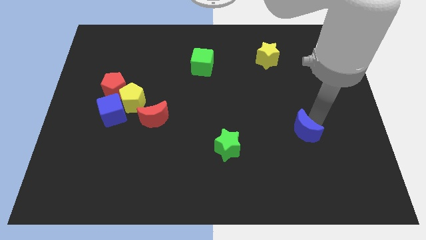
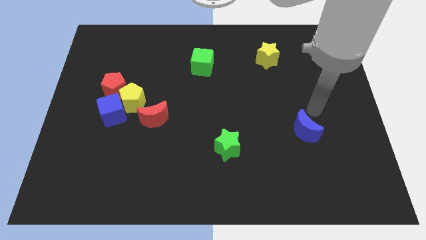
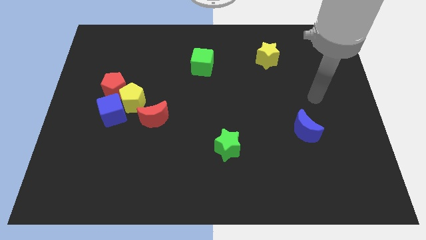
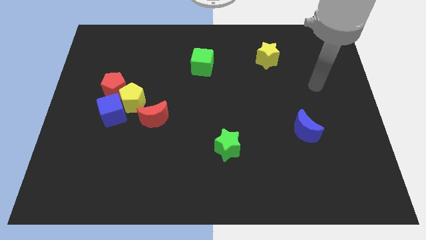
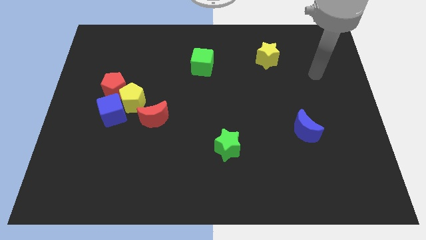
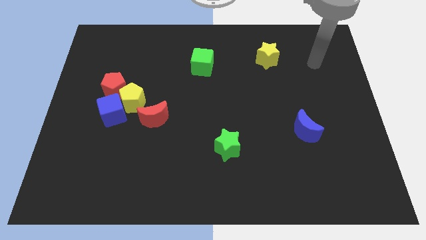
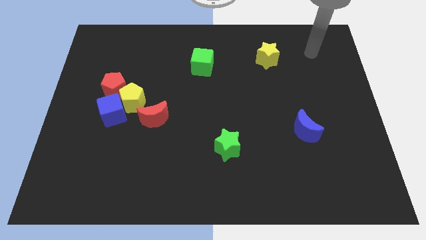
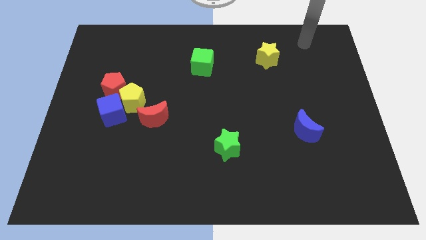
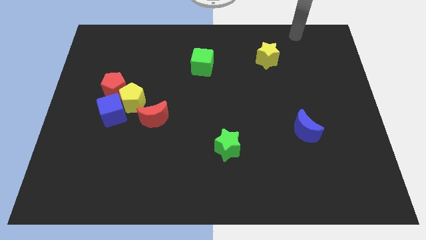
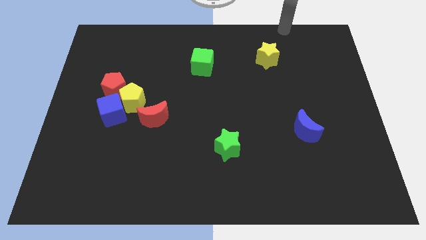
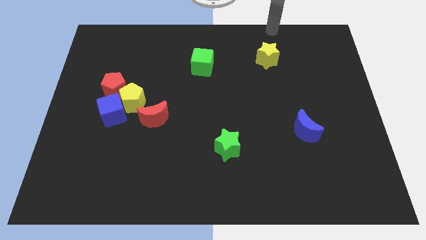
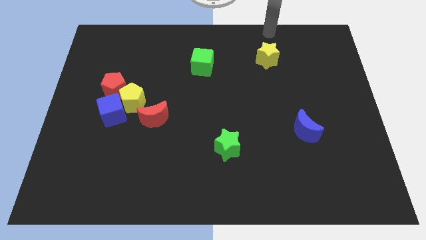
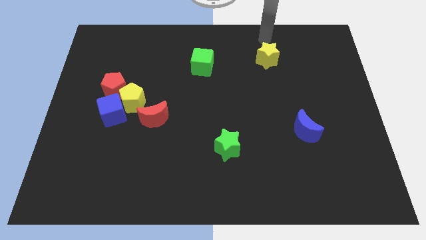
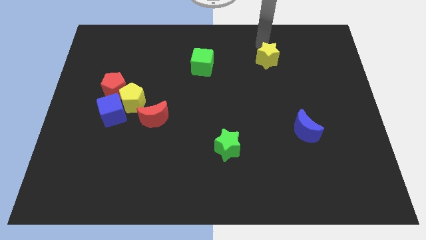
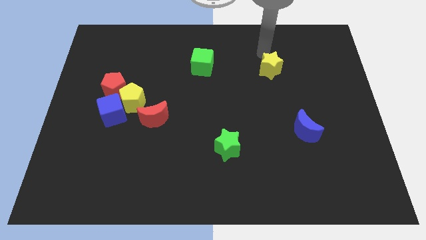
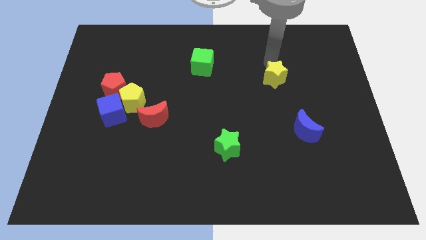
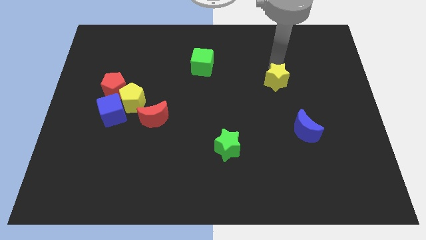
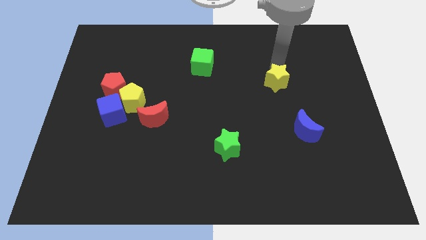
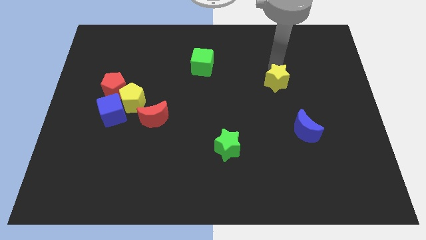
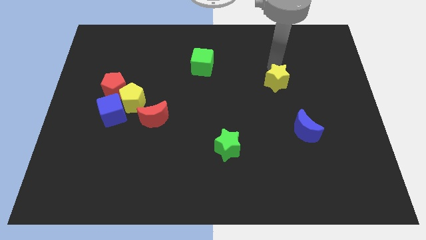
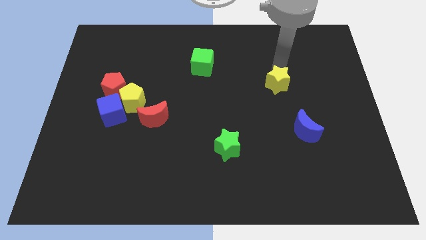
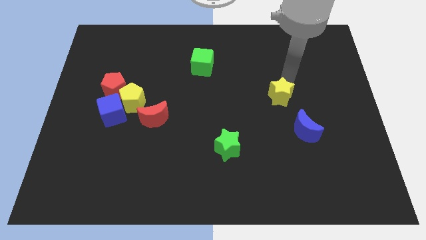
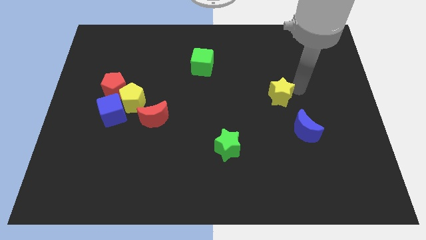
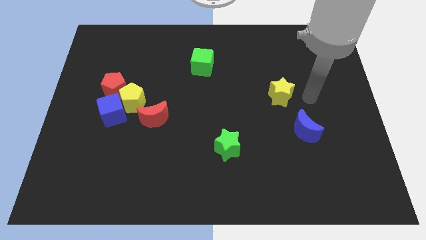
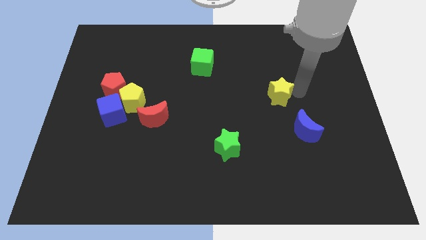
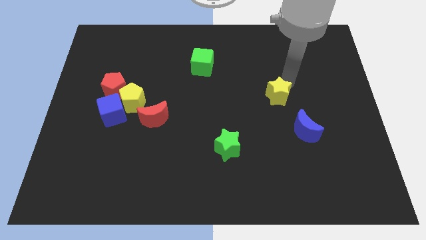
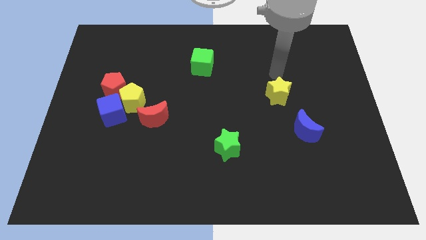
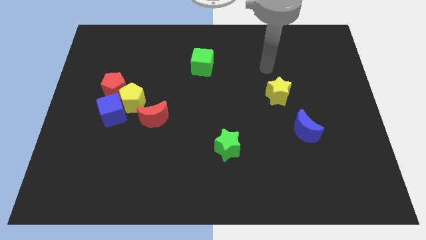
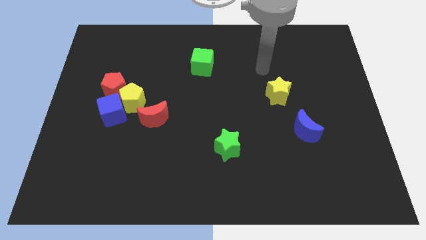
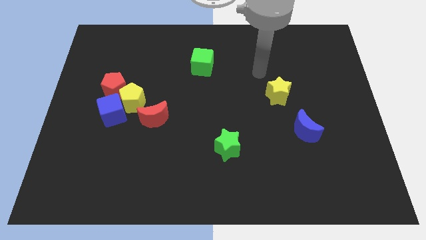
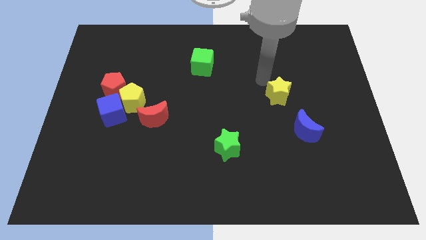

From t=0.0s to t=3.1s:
push the yellow star to the top left of the blue moon

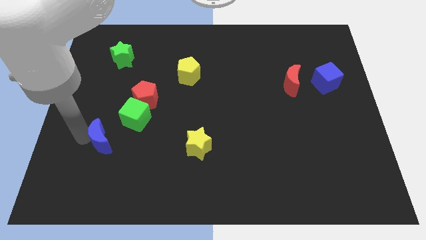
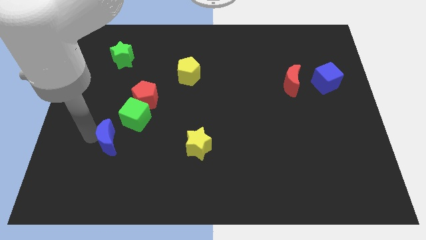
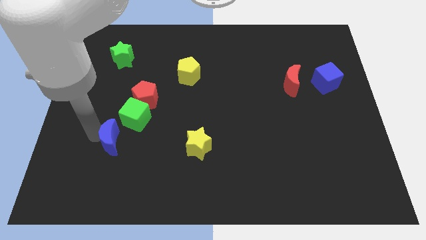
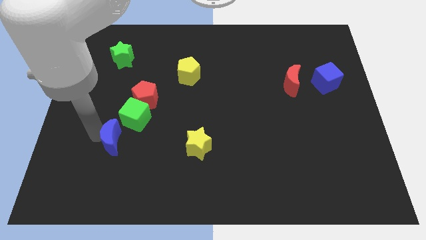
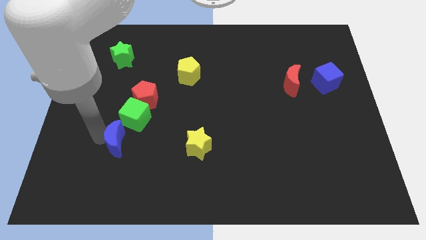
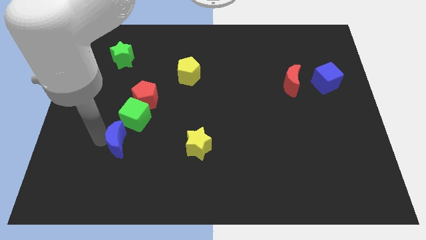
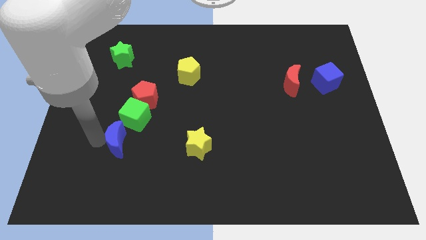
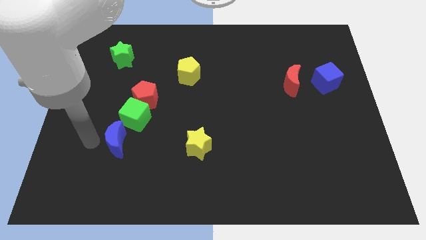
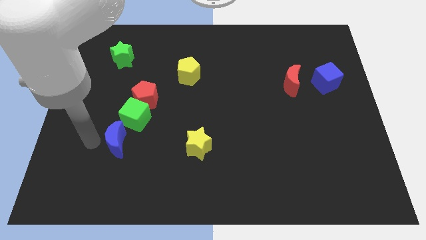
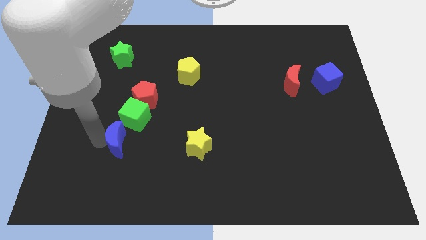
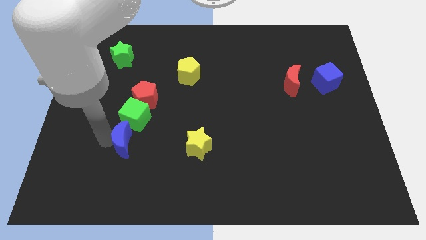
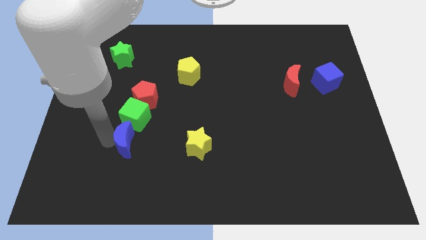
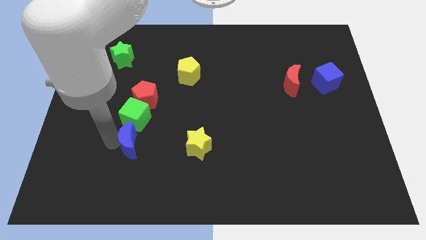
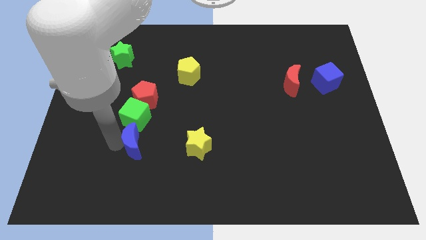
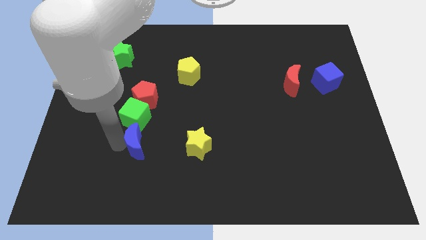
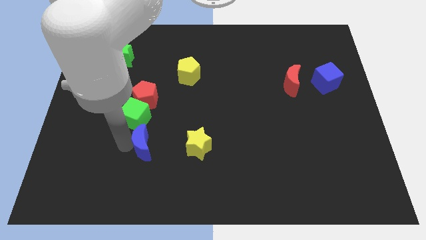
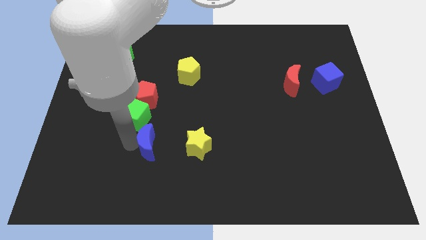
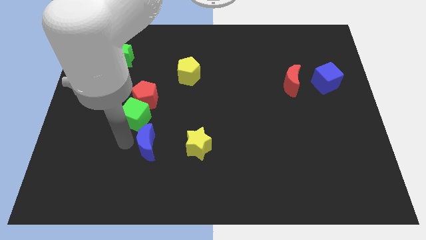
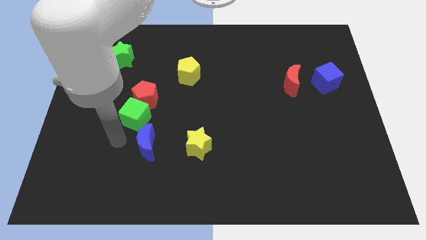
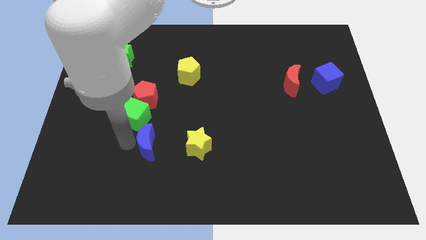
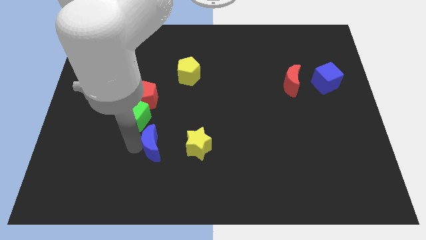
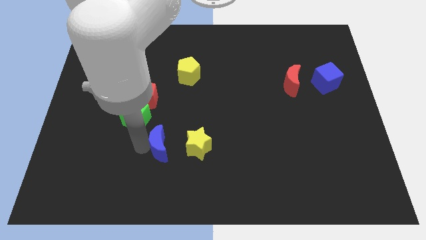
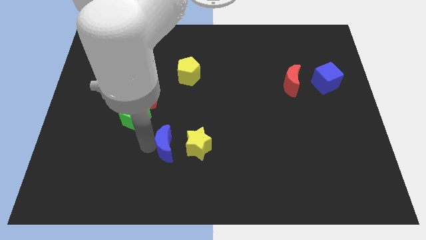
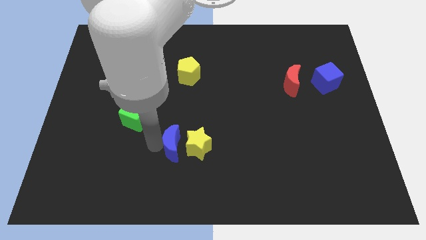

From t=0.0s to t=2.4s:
push the blue moon to the left of the yellow star

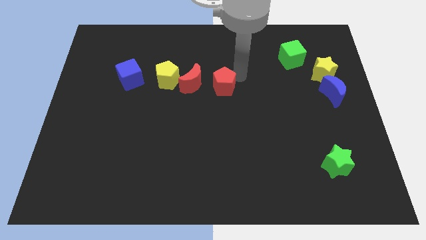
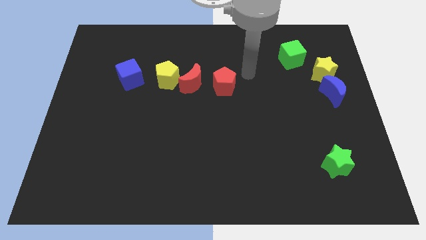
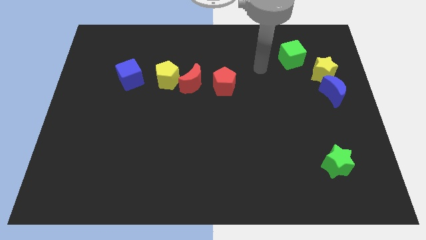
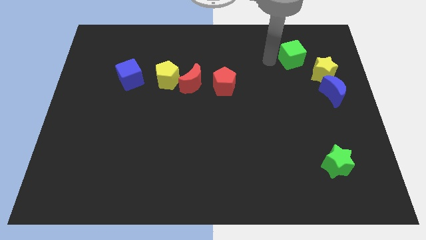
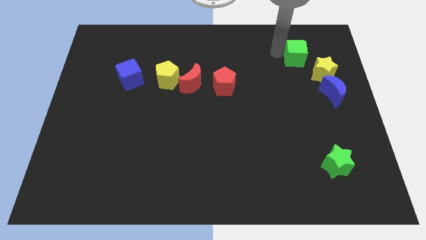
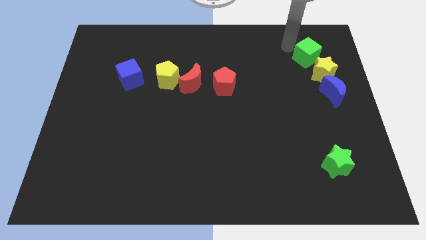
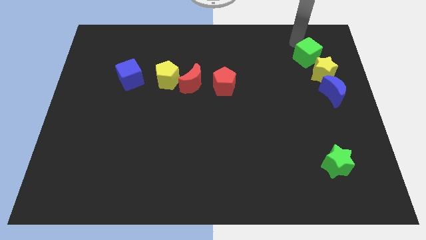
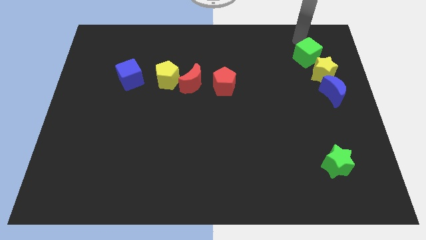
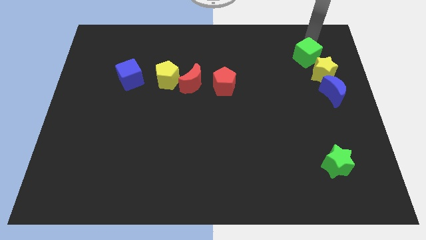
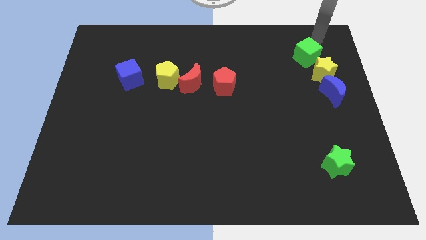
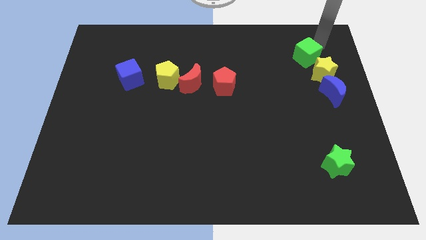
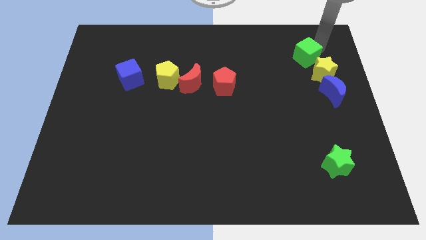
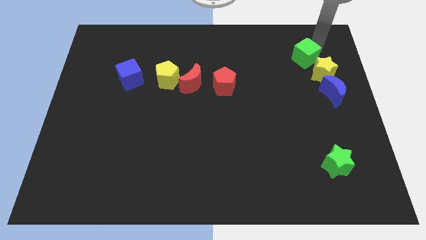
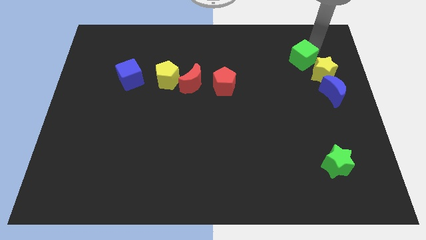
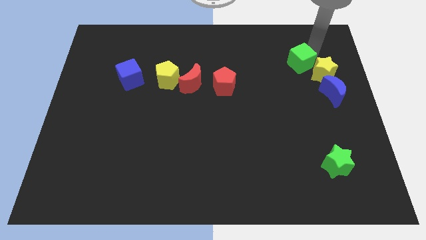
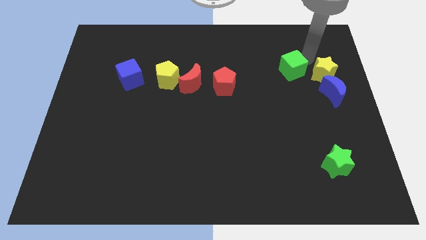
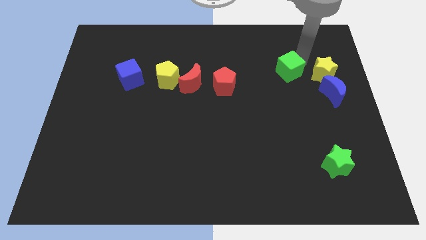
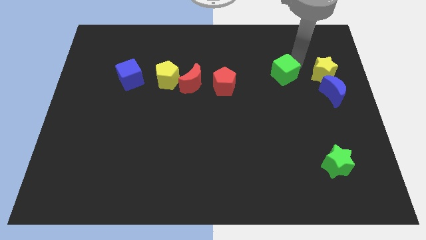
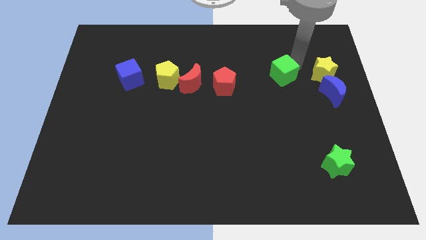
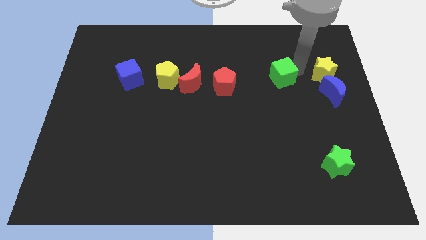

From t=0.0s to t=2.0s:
push the green cube downwards

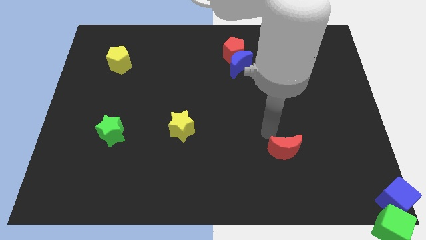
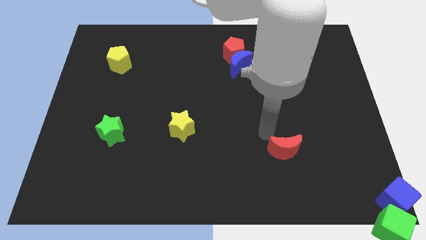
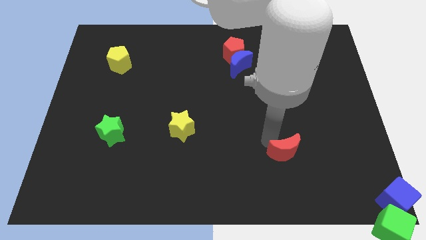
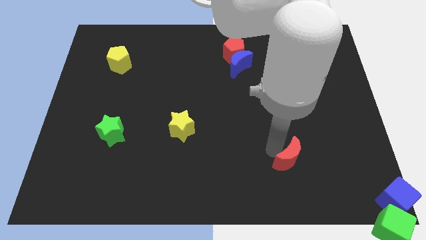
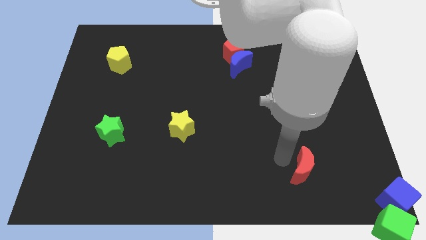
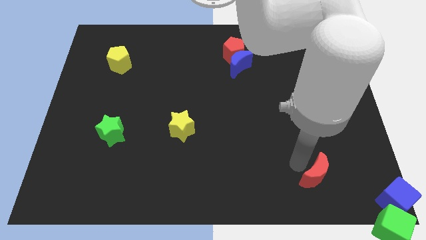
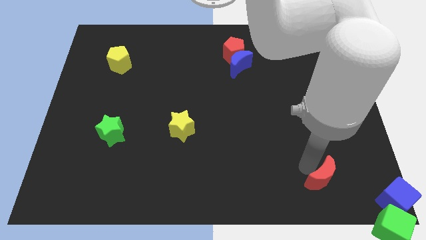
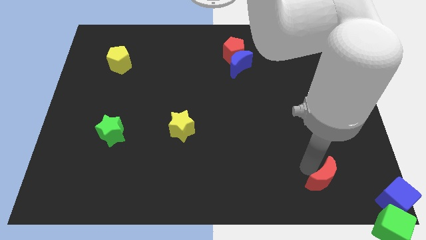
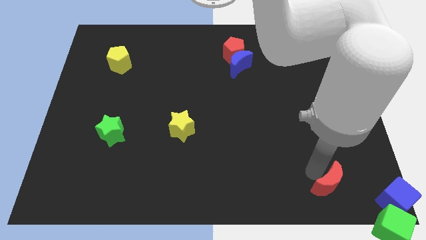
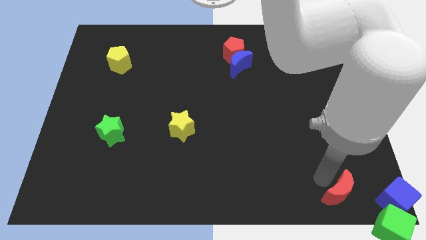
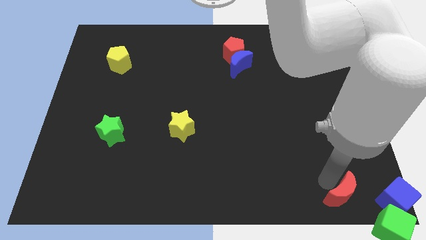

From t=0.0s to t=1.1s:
place the red moon left to the blue cube

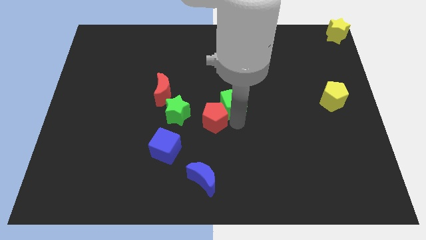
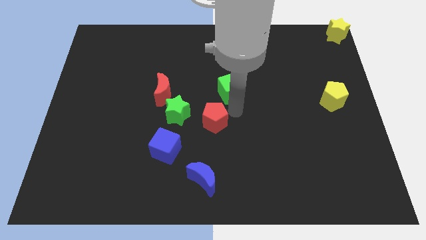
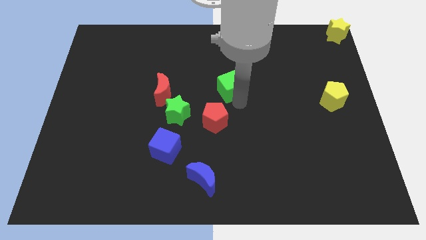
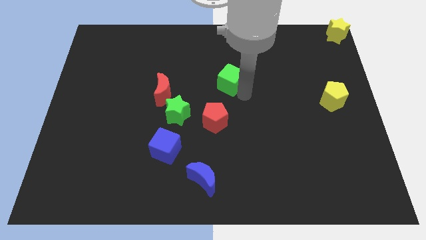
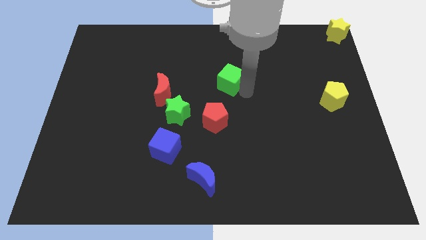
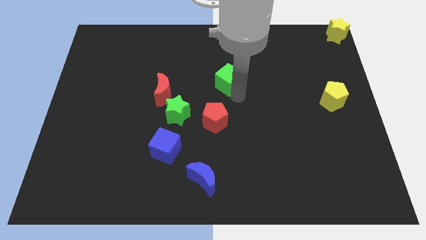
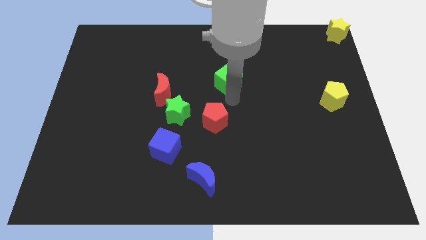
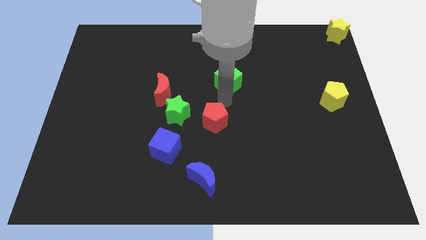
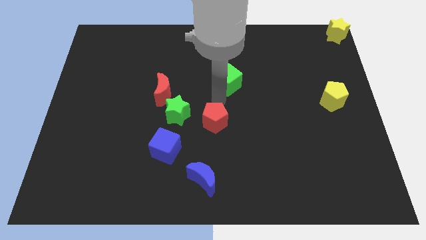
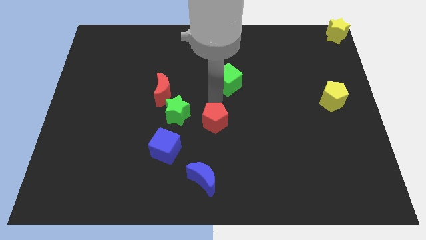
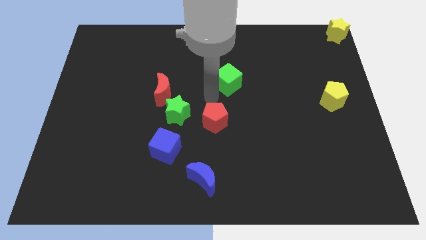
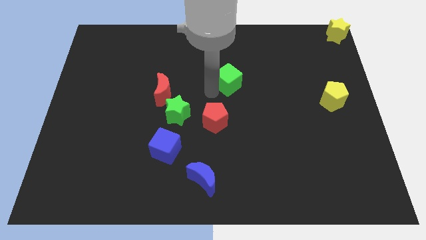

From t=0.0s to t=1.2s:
separate the green cube from the red pentagon
